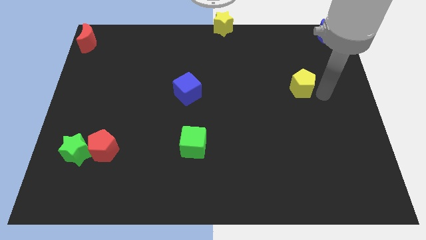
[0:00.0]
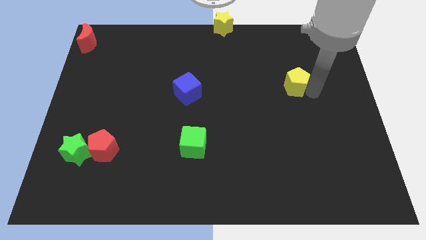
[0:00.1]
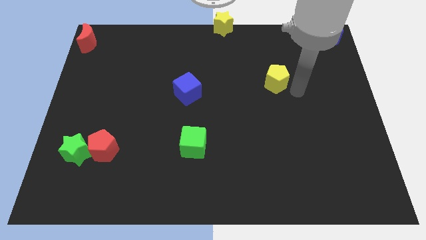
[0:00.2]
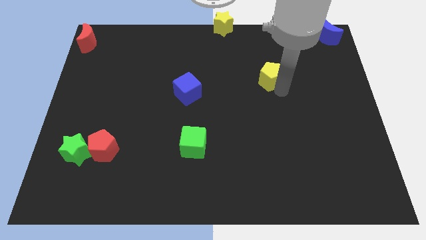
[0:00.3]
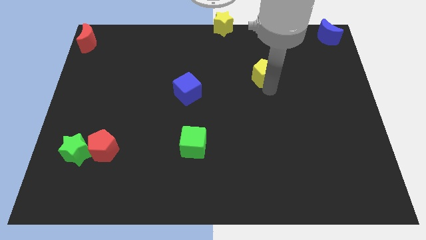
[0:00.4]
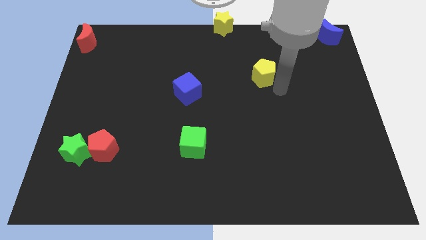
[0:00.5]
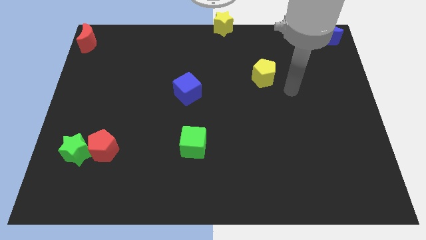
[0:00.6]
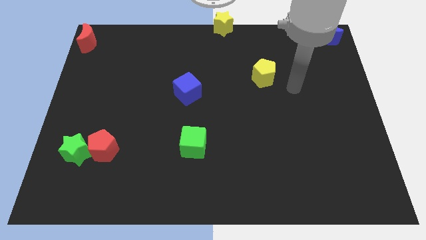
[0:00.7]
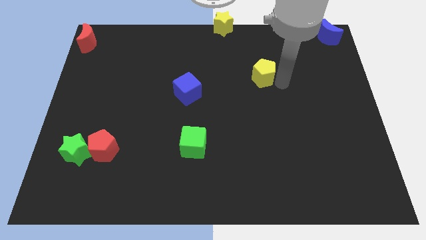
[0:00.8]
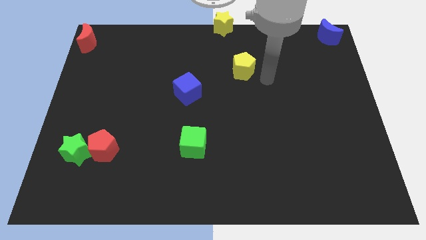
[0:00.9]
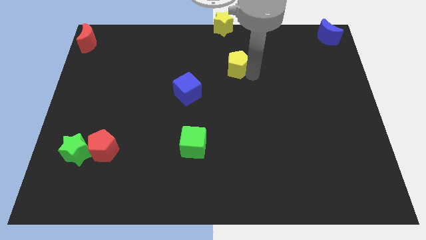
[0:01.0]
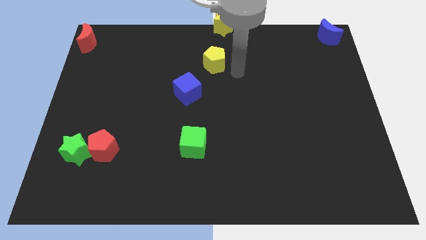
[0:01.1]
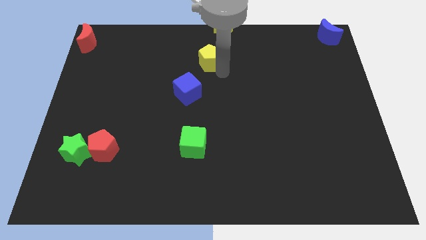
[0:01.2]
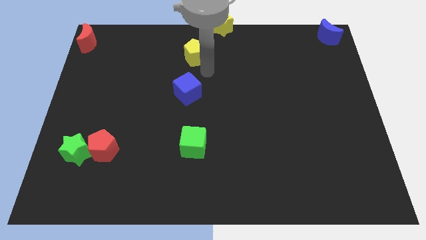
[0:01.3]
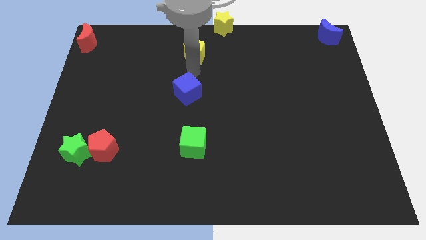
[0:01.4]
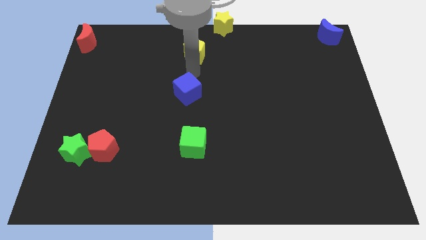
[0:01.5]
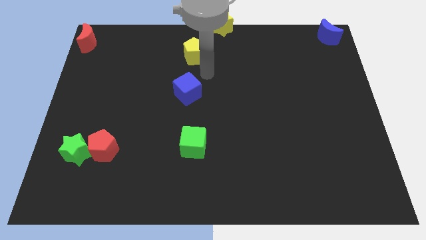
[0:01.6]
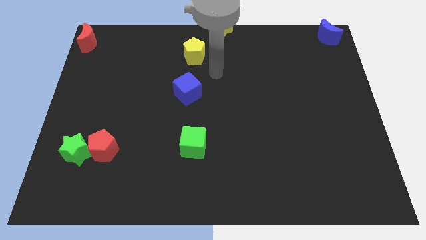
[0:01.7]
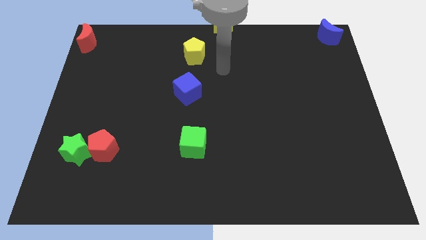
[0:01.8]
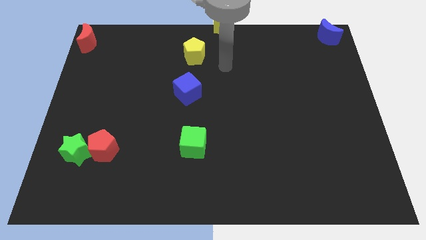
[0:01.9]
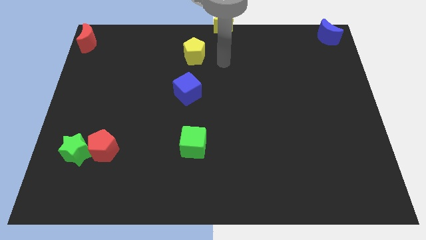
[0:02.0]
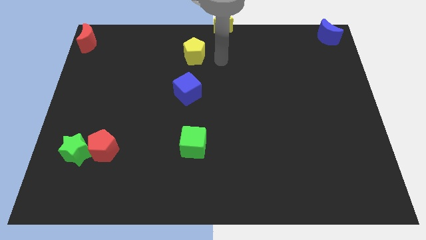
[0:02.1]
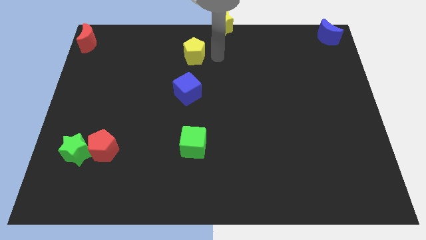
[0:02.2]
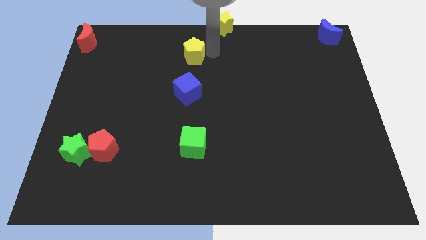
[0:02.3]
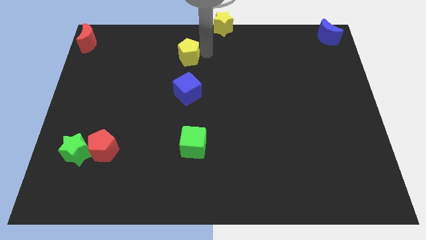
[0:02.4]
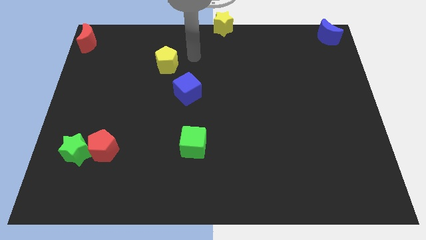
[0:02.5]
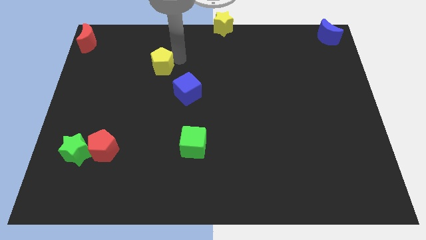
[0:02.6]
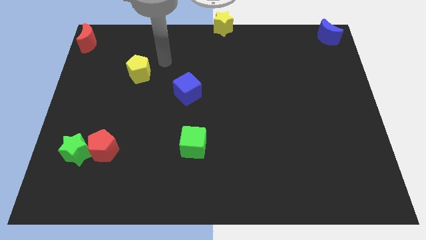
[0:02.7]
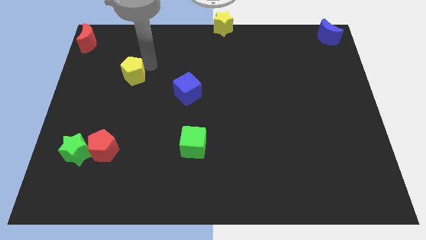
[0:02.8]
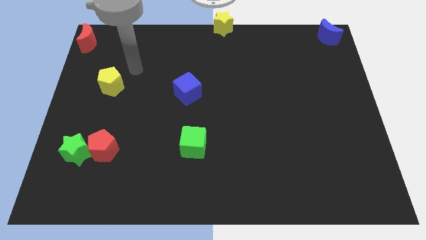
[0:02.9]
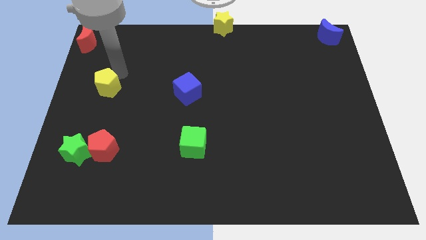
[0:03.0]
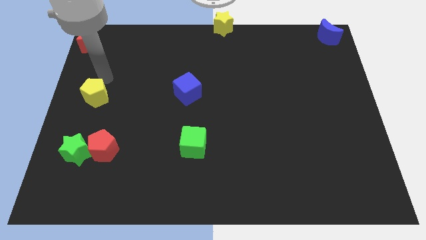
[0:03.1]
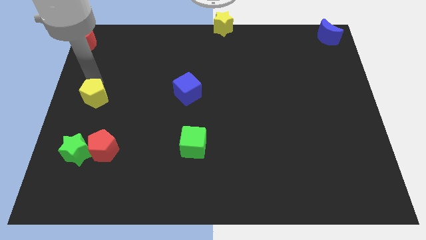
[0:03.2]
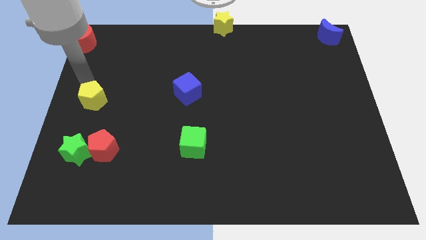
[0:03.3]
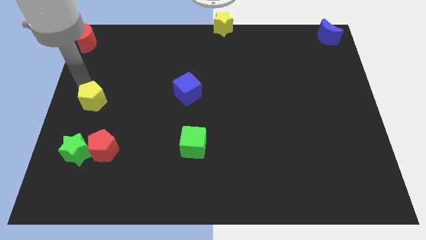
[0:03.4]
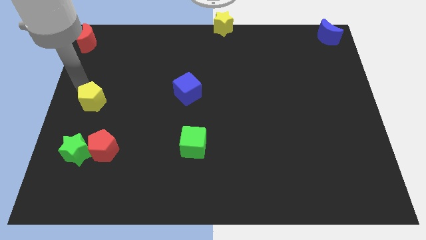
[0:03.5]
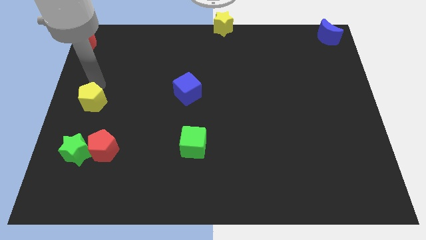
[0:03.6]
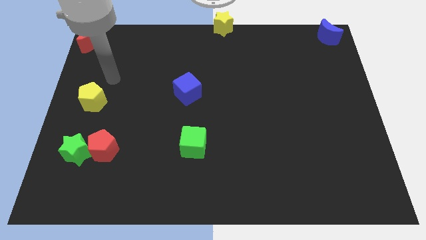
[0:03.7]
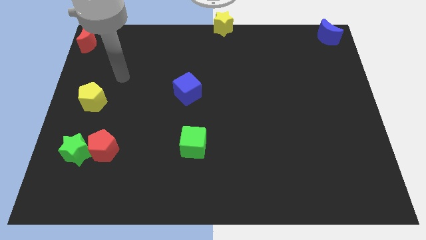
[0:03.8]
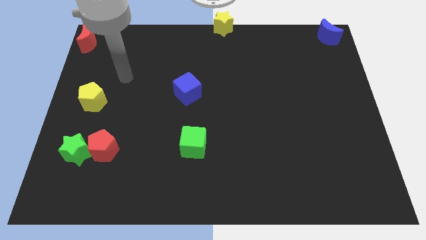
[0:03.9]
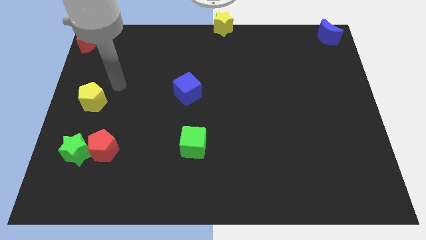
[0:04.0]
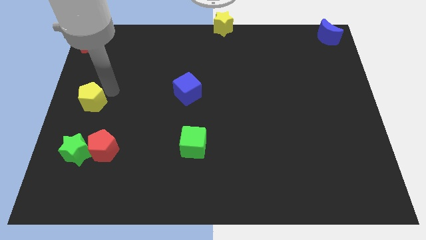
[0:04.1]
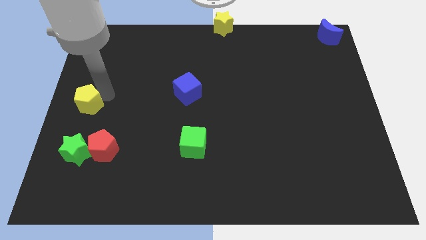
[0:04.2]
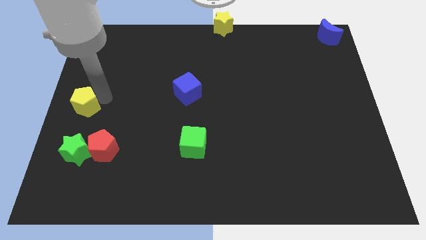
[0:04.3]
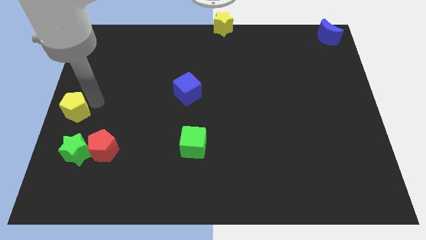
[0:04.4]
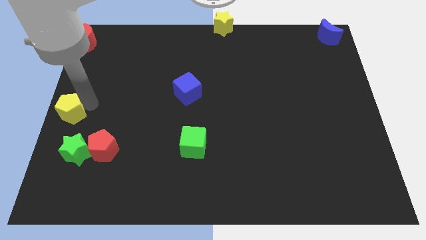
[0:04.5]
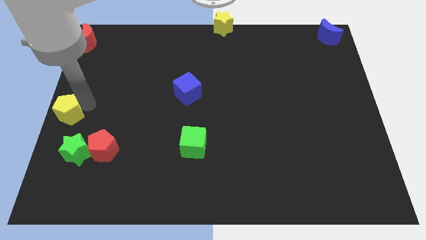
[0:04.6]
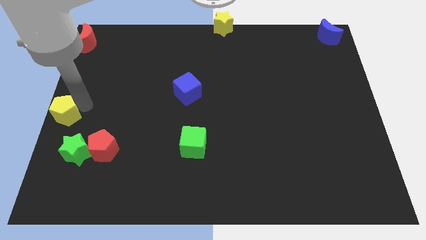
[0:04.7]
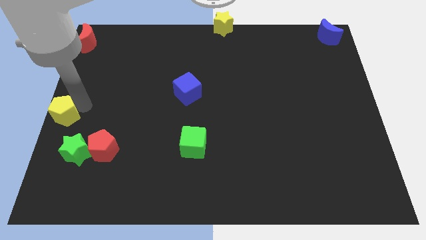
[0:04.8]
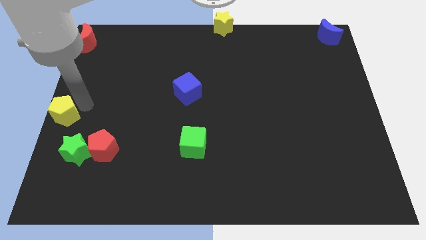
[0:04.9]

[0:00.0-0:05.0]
place the yellow pentagon left to the blue cube

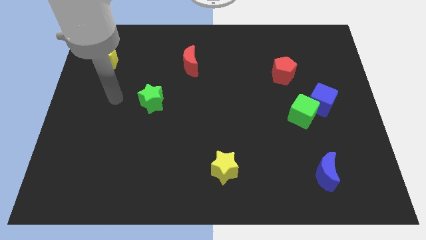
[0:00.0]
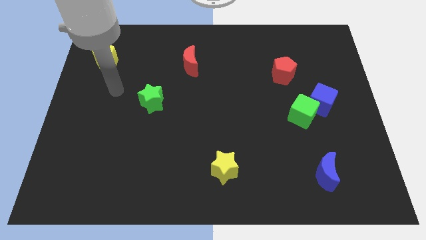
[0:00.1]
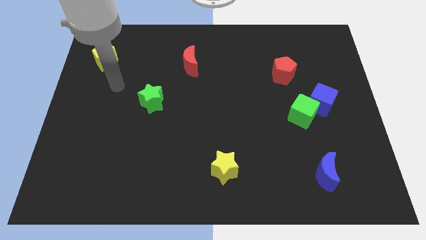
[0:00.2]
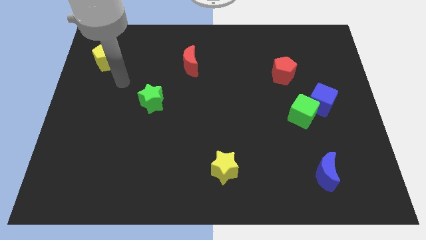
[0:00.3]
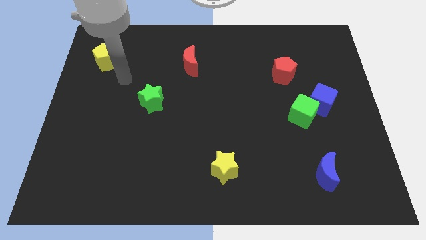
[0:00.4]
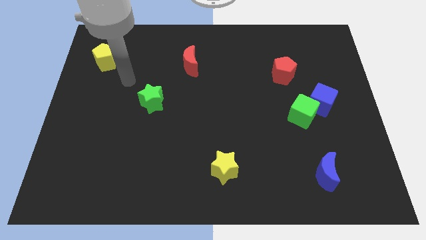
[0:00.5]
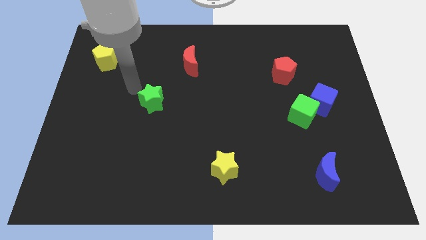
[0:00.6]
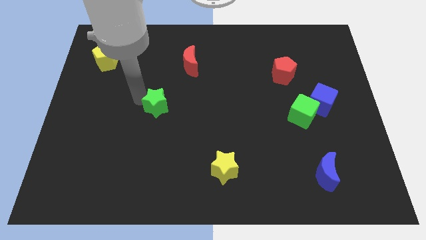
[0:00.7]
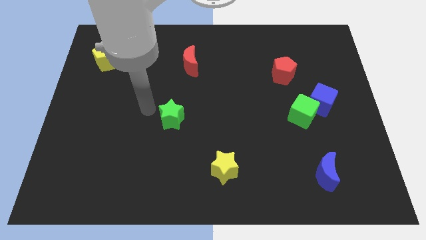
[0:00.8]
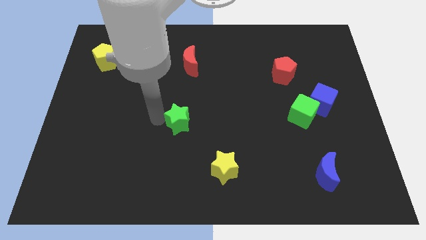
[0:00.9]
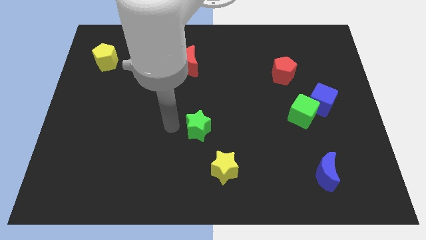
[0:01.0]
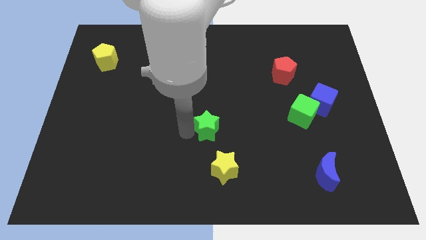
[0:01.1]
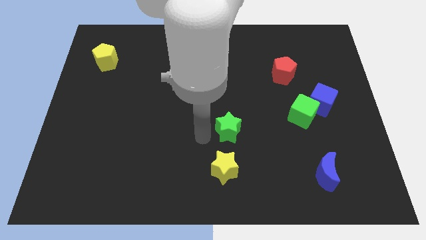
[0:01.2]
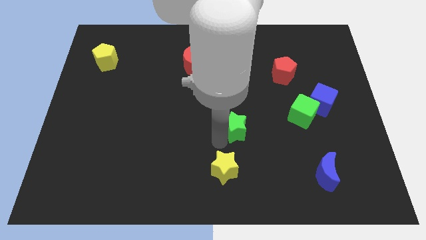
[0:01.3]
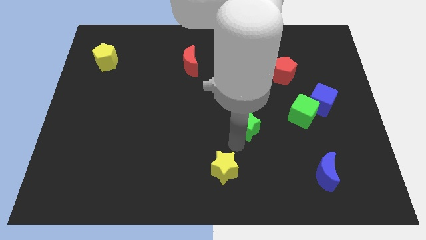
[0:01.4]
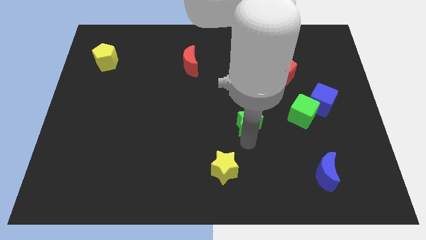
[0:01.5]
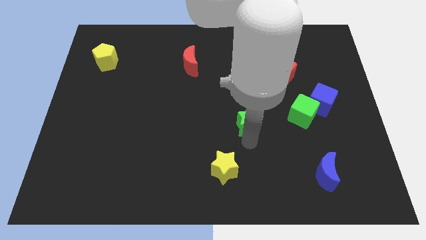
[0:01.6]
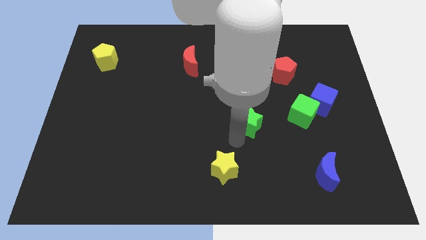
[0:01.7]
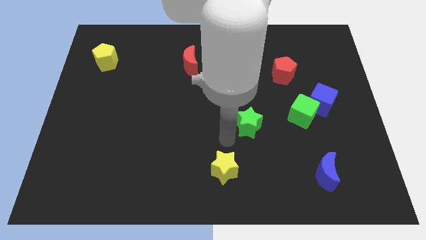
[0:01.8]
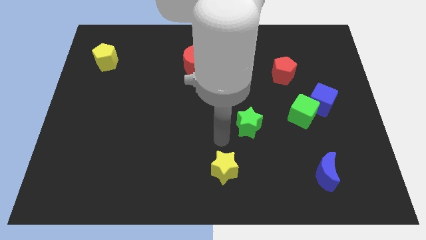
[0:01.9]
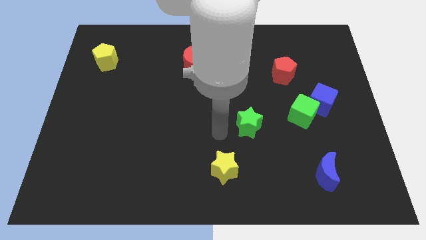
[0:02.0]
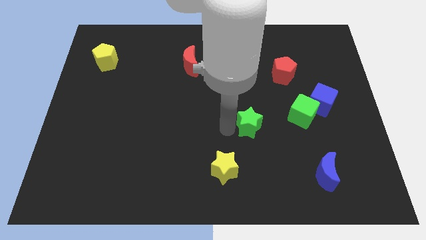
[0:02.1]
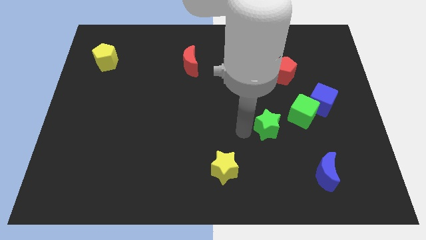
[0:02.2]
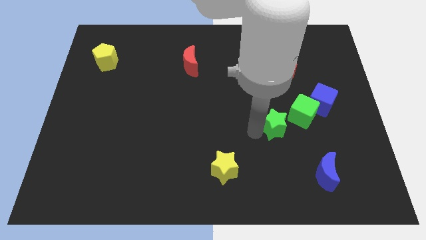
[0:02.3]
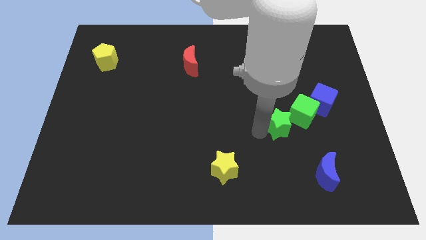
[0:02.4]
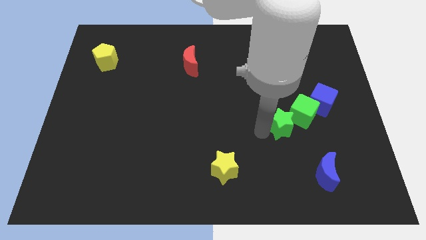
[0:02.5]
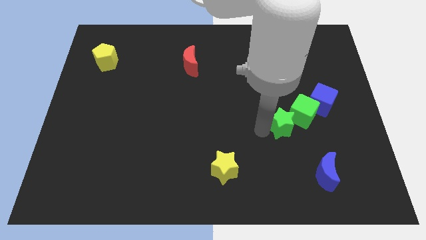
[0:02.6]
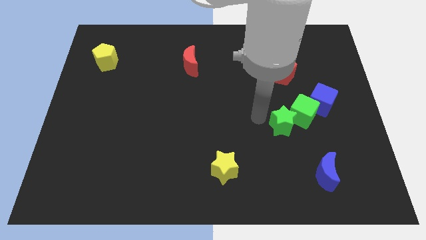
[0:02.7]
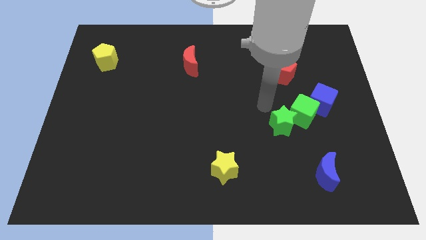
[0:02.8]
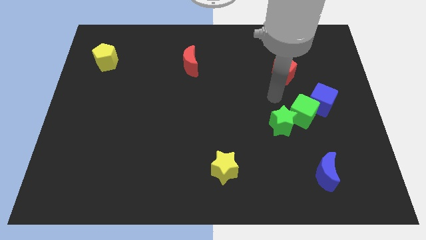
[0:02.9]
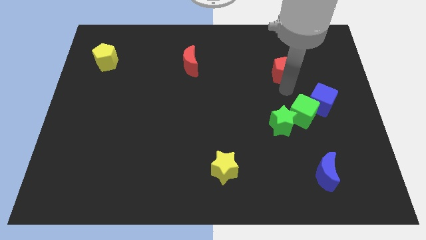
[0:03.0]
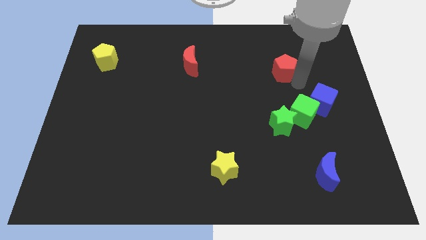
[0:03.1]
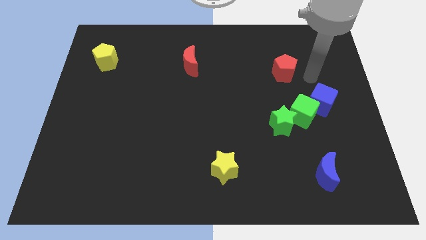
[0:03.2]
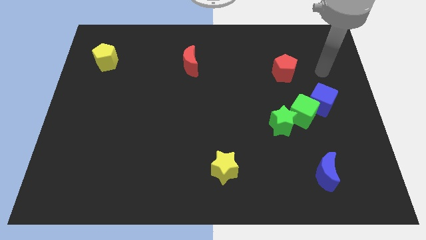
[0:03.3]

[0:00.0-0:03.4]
move the green star into the green cube

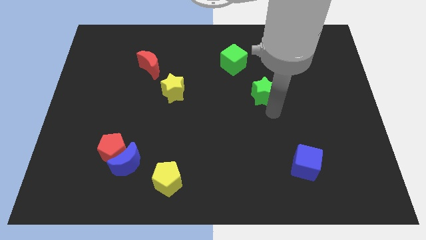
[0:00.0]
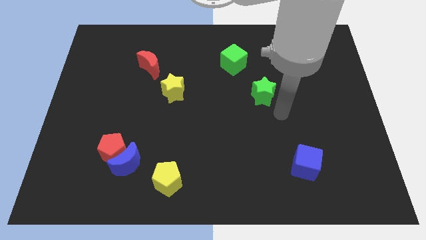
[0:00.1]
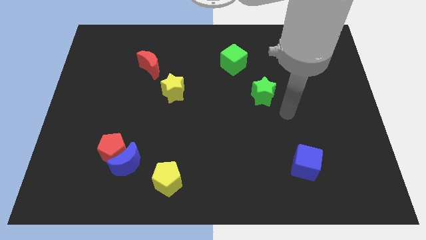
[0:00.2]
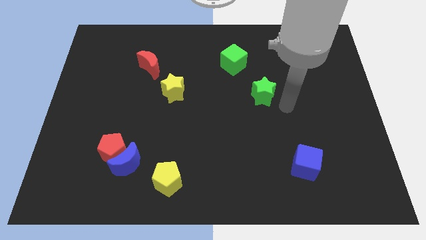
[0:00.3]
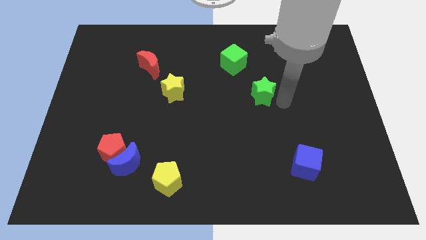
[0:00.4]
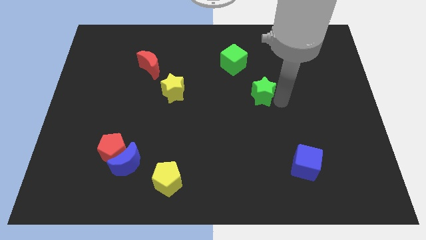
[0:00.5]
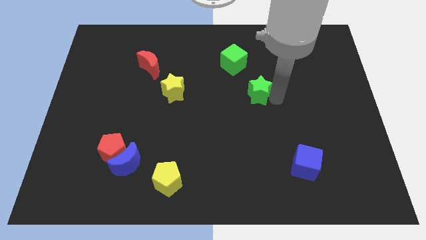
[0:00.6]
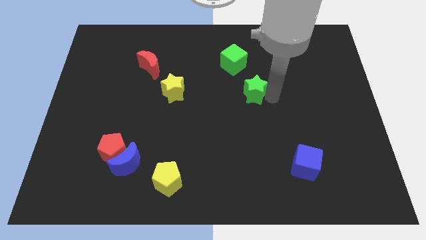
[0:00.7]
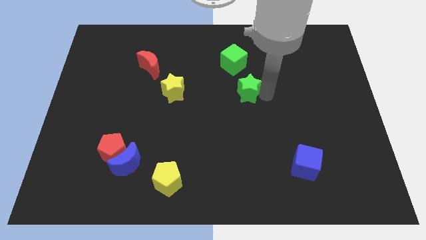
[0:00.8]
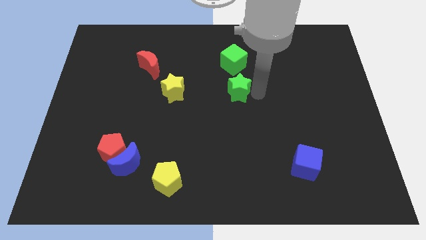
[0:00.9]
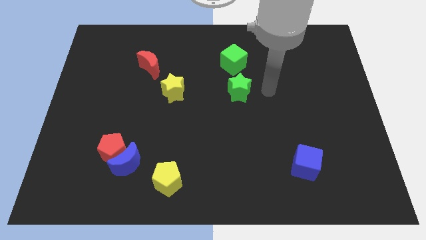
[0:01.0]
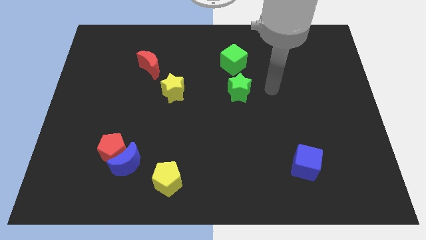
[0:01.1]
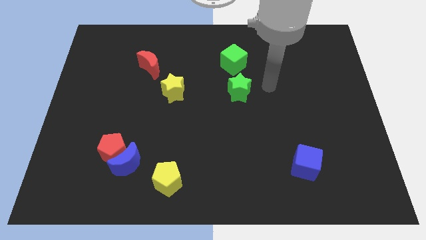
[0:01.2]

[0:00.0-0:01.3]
place green star to the bottom of the green cube
